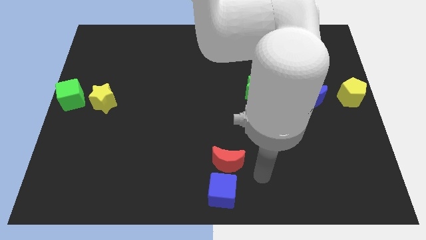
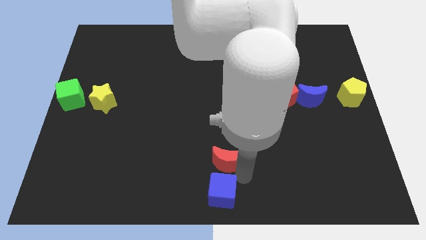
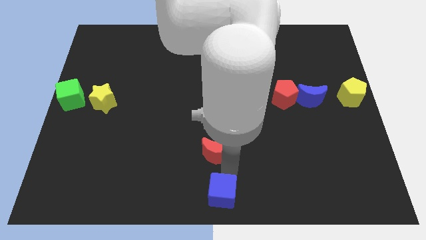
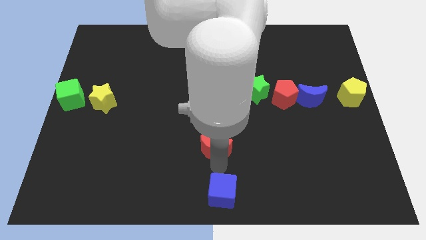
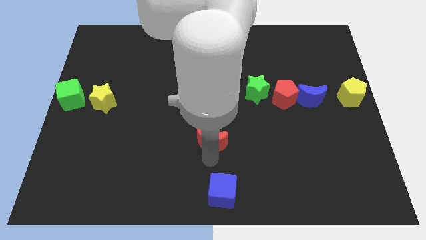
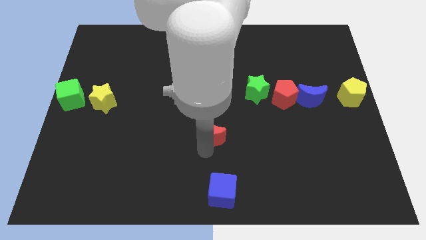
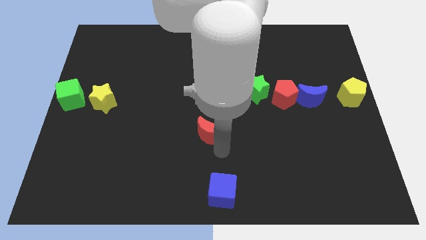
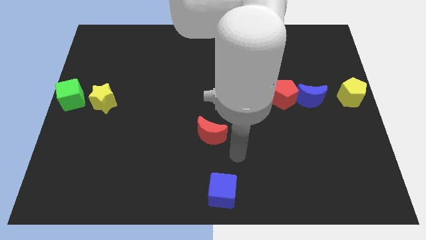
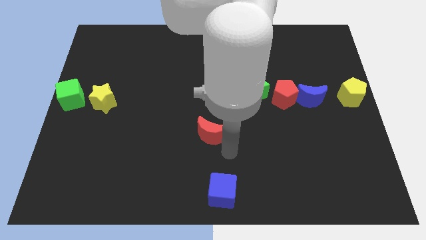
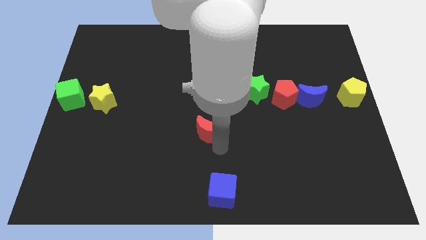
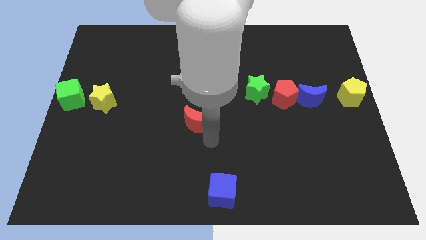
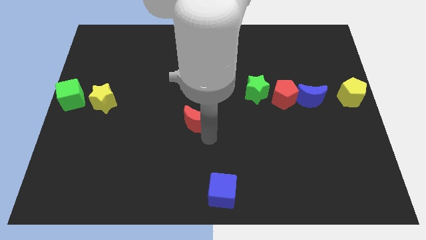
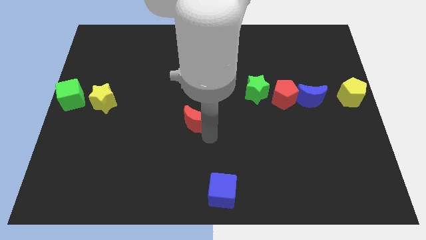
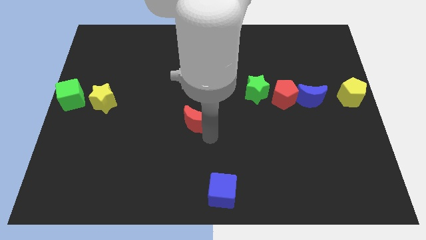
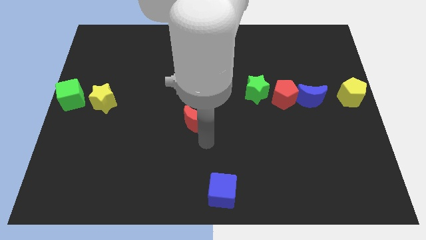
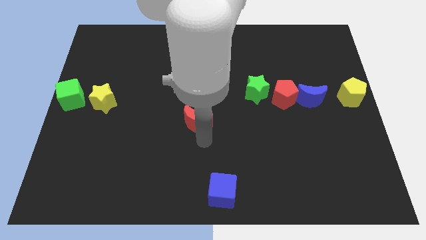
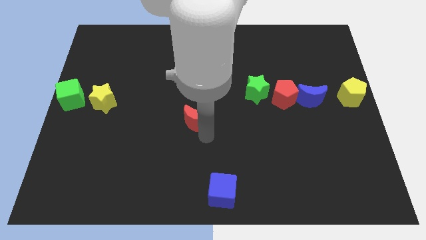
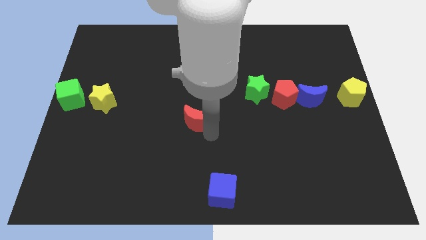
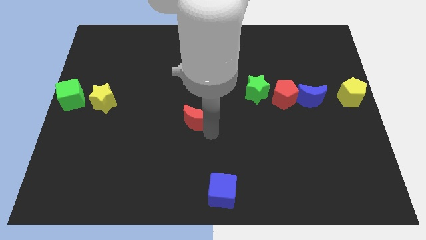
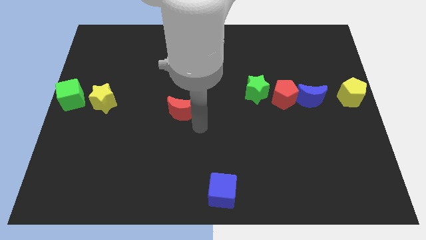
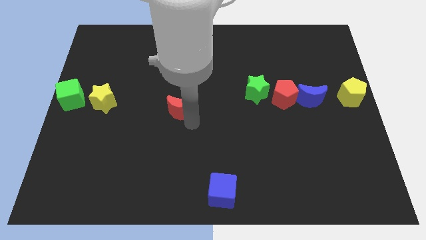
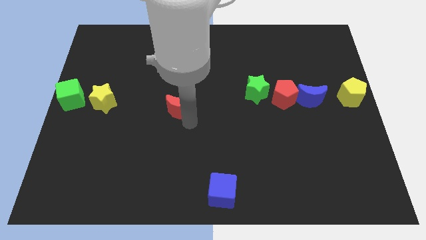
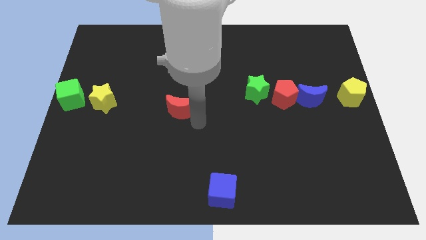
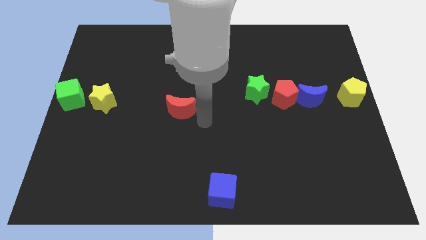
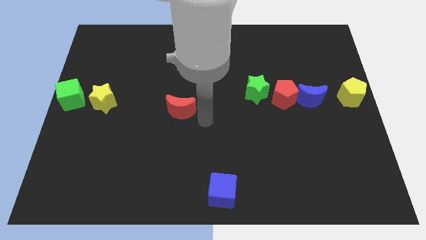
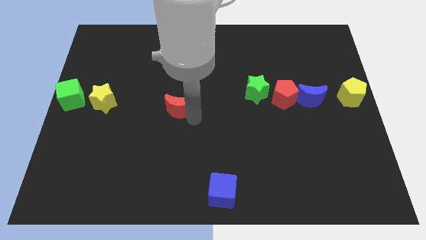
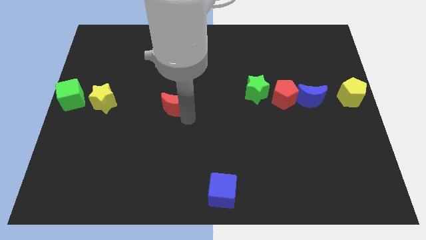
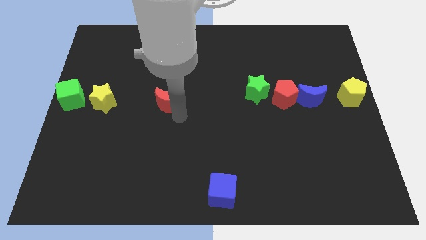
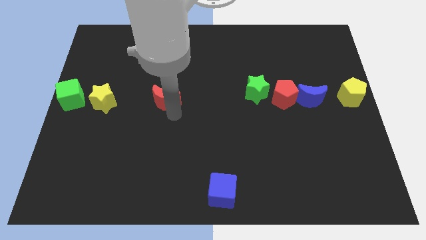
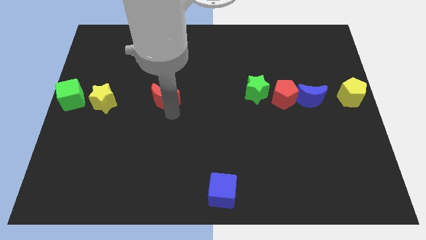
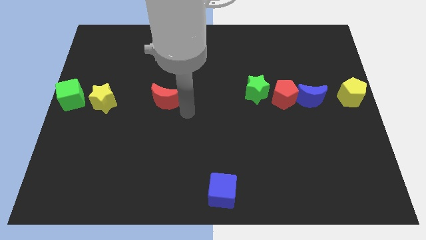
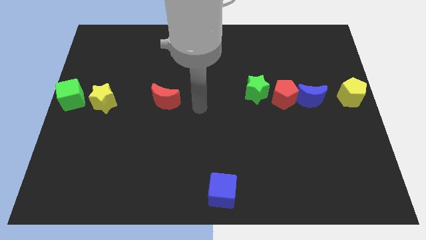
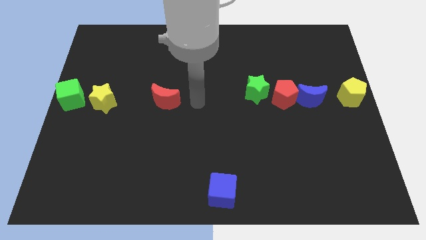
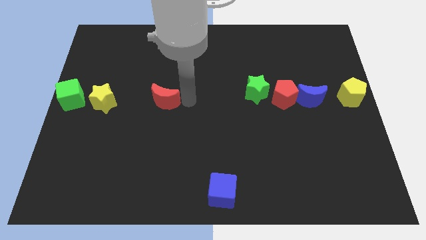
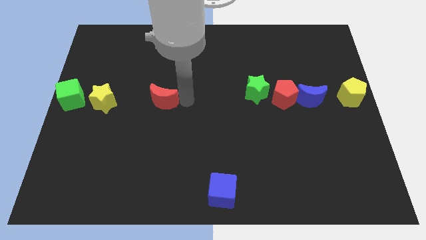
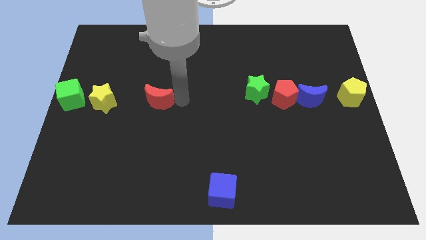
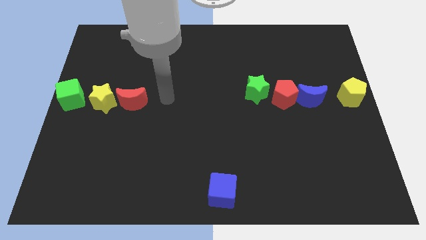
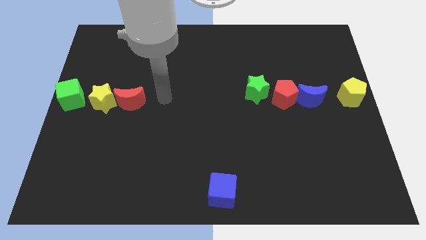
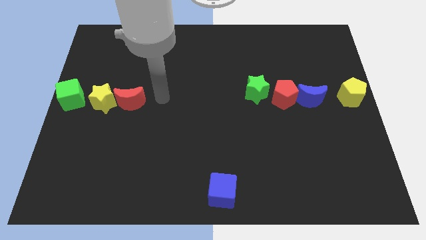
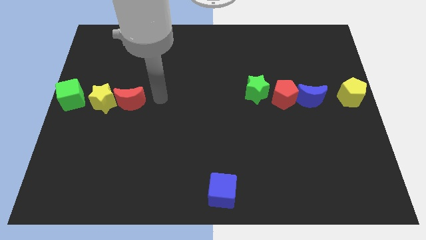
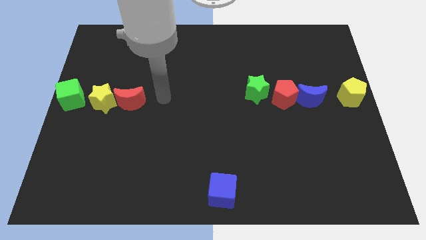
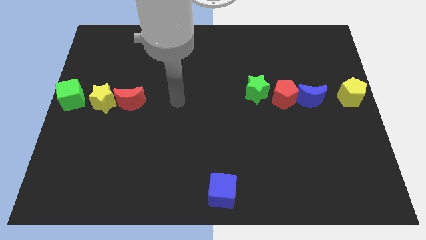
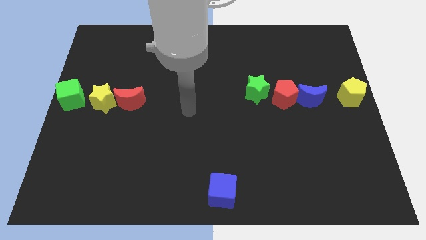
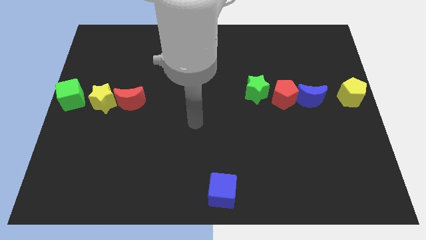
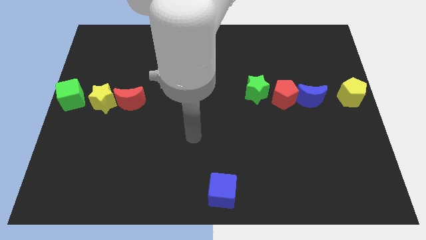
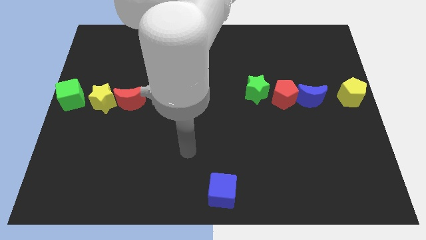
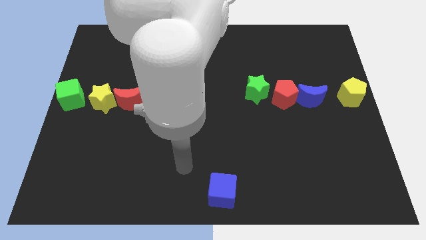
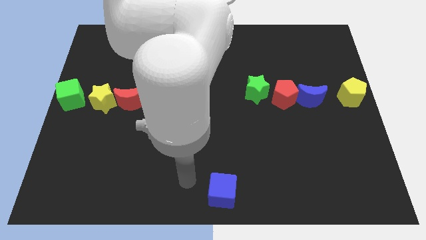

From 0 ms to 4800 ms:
place the red crescent close to the yellow star

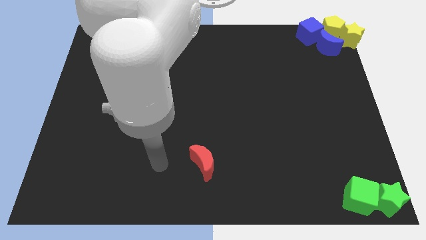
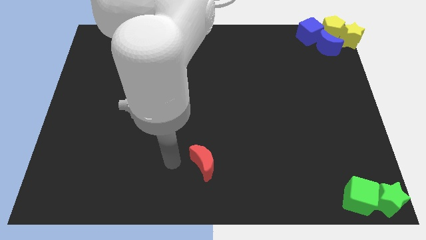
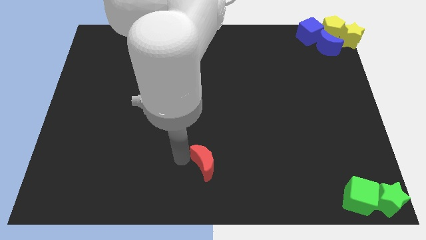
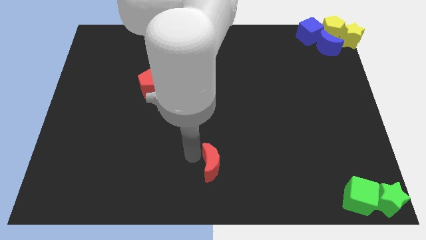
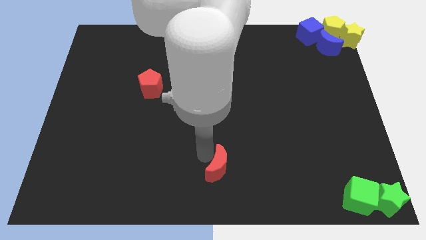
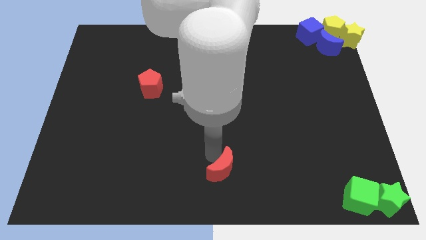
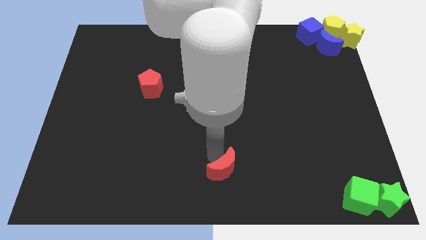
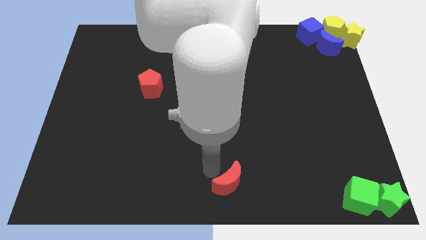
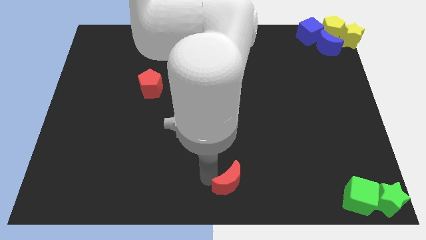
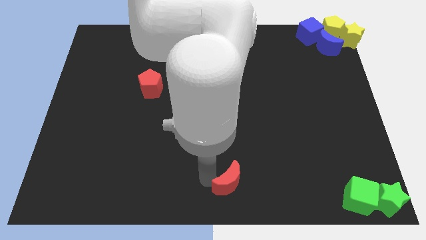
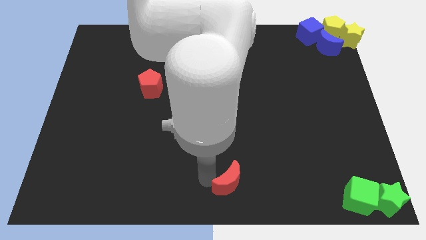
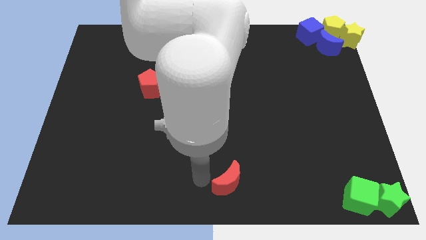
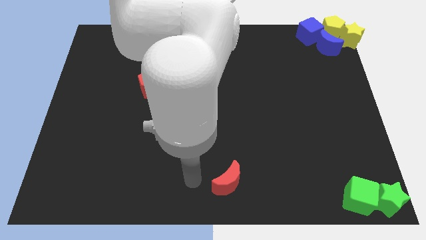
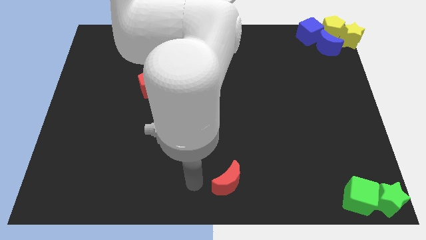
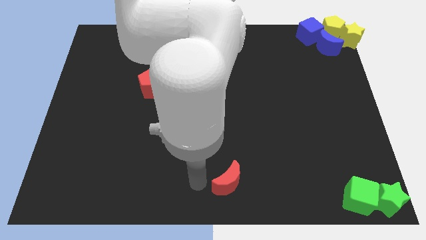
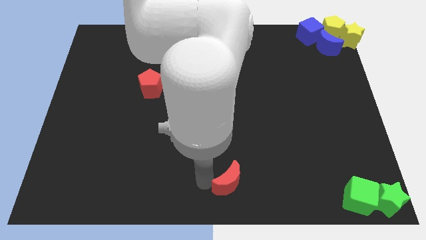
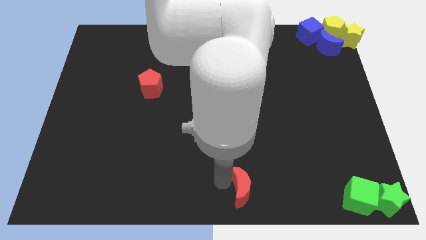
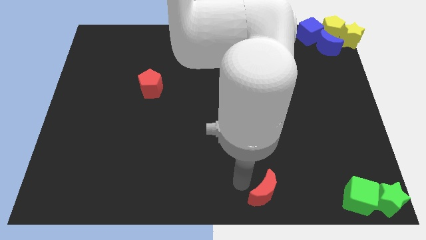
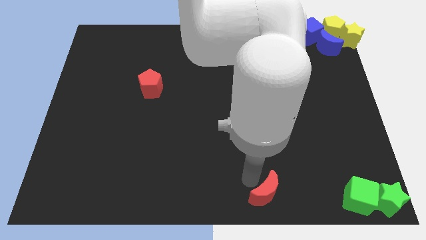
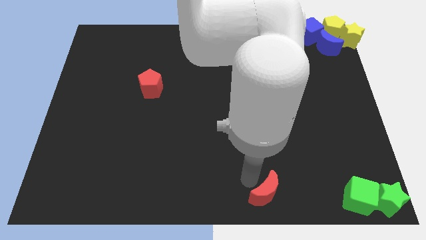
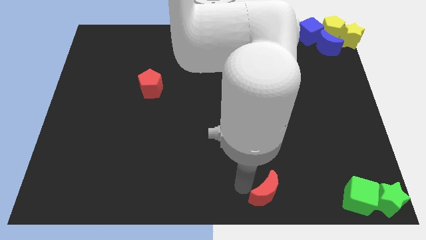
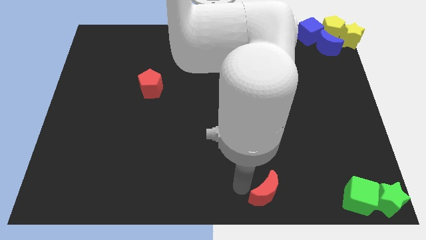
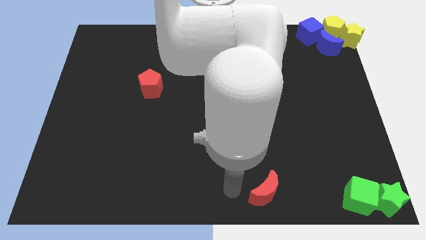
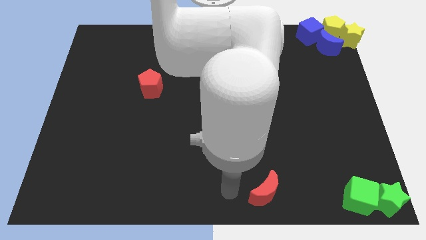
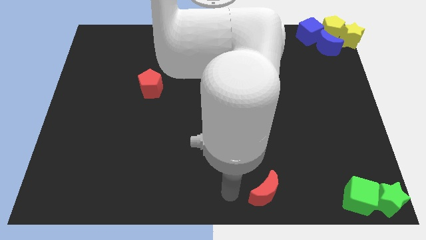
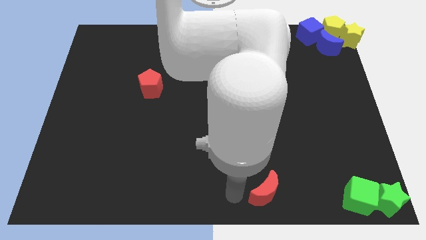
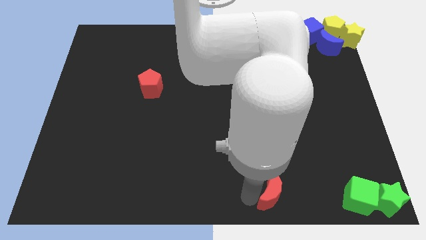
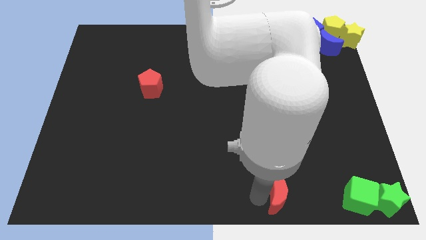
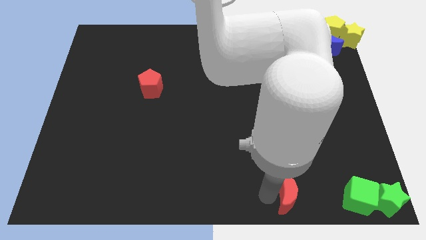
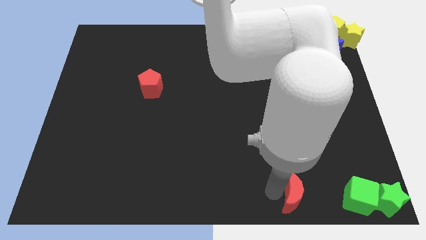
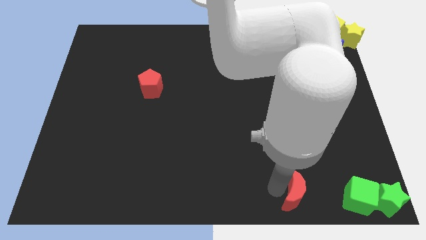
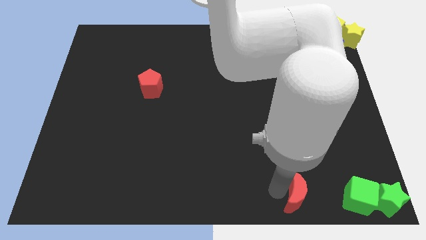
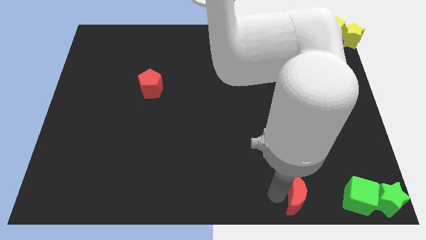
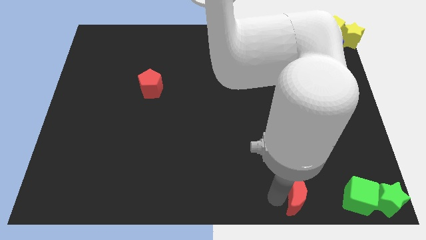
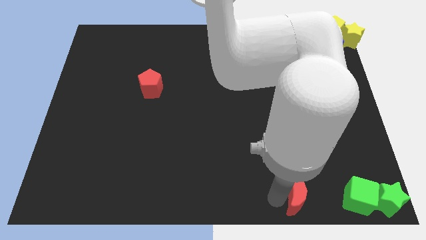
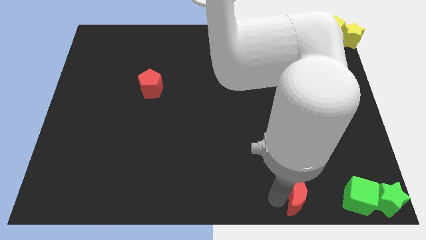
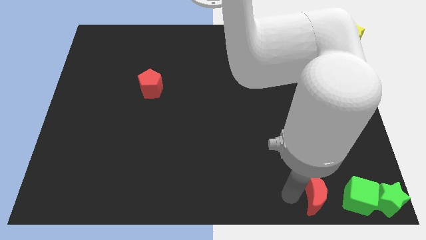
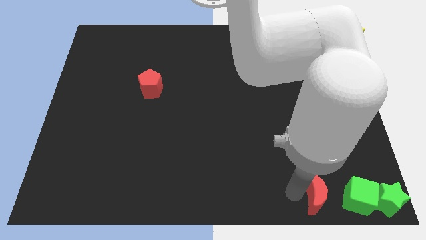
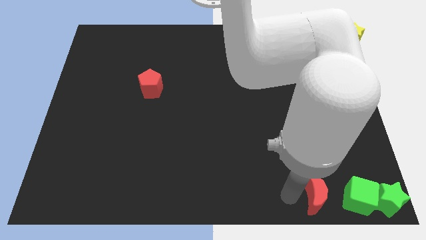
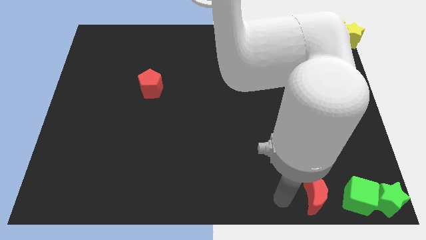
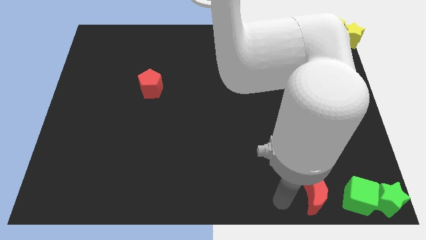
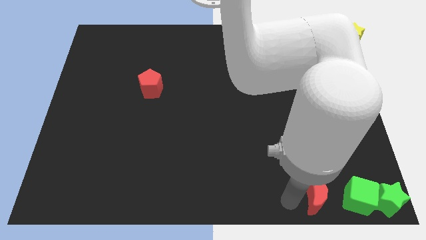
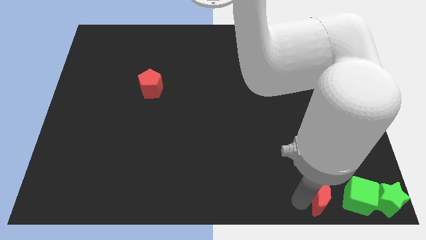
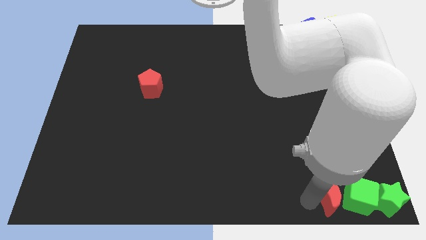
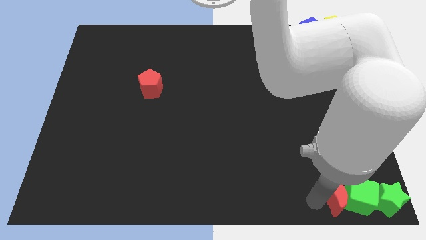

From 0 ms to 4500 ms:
place the red crescent left to the green cube
